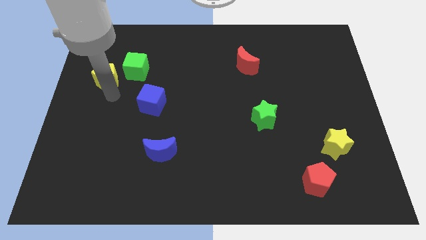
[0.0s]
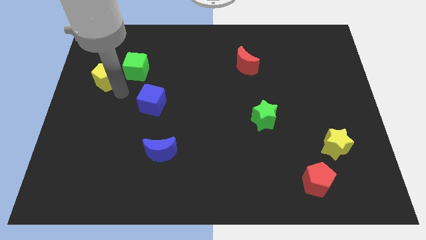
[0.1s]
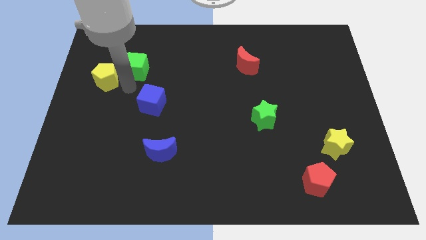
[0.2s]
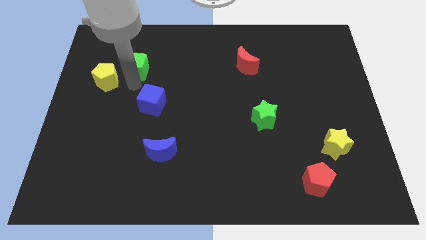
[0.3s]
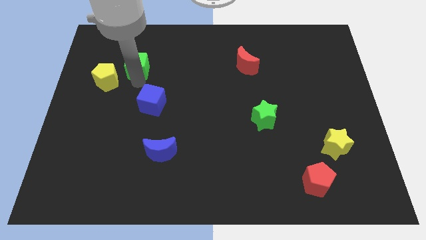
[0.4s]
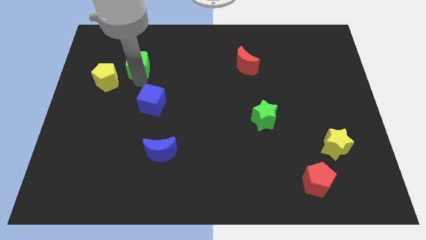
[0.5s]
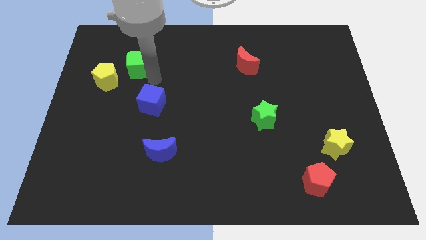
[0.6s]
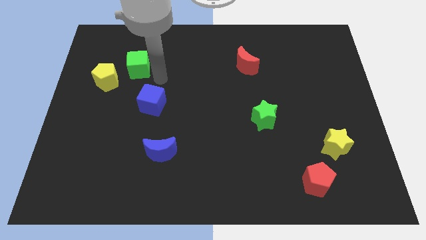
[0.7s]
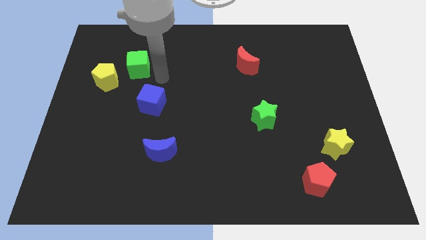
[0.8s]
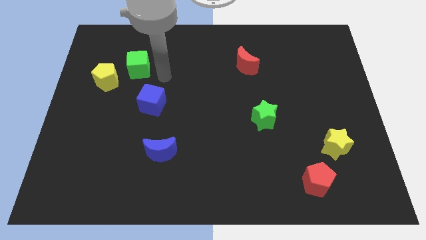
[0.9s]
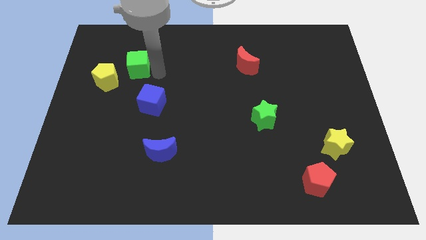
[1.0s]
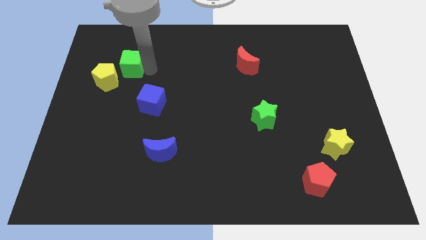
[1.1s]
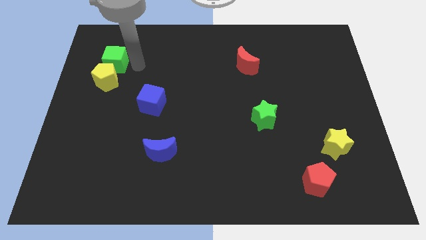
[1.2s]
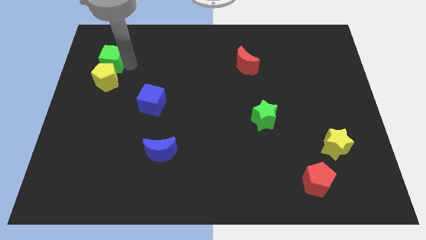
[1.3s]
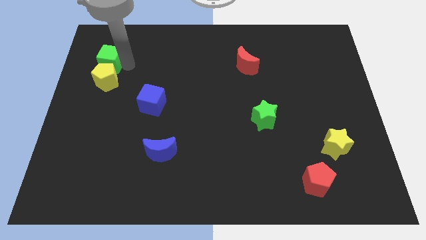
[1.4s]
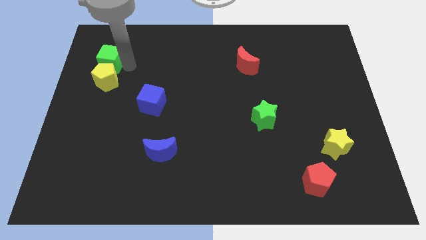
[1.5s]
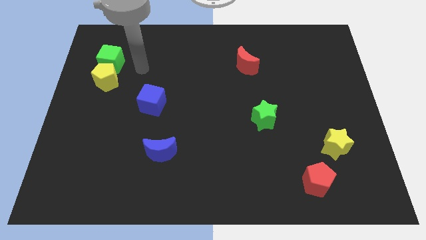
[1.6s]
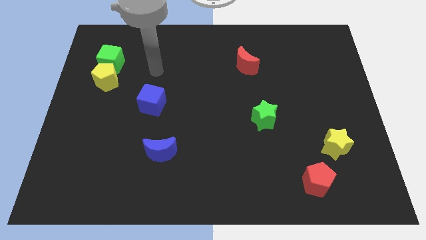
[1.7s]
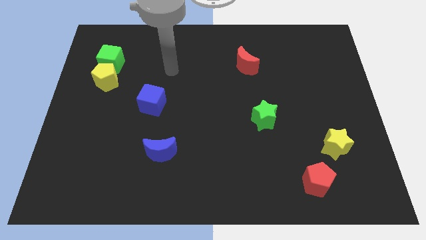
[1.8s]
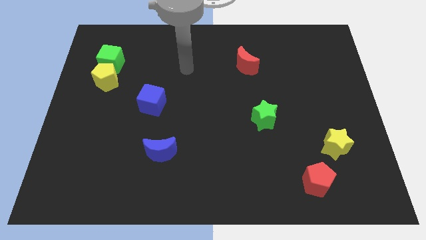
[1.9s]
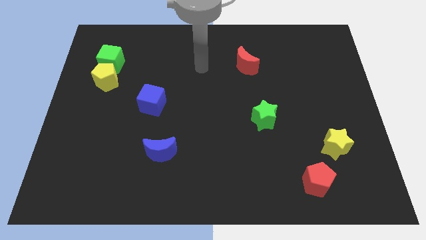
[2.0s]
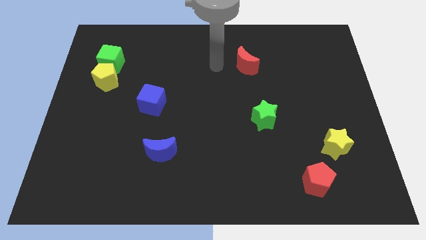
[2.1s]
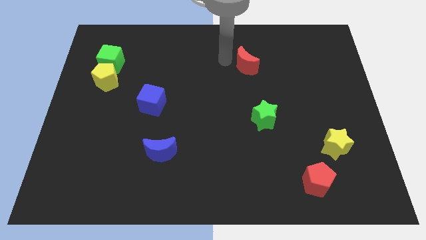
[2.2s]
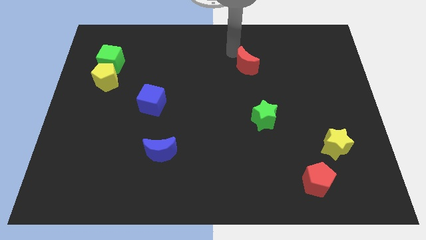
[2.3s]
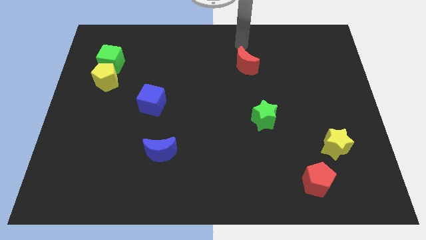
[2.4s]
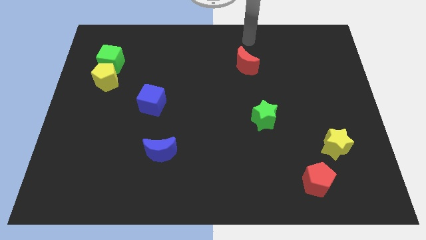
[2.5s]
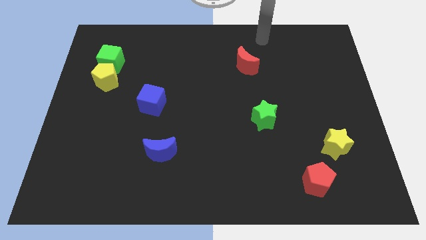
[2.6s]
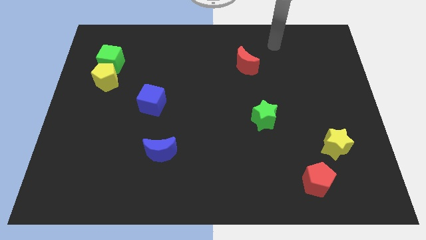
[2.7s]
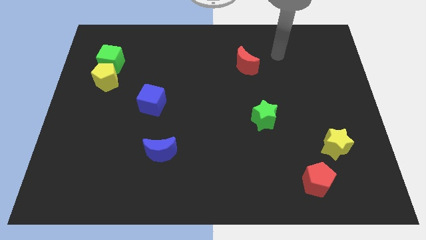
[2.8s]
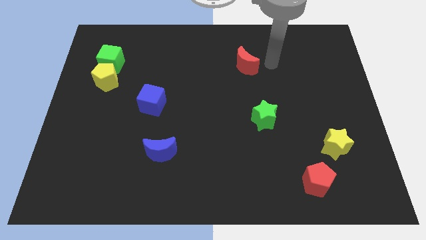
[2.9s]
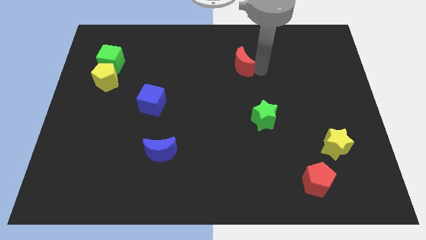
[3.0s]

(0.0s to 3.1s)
push the green cube into the yellow pentagon

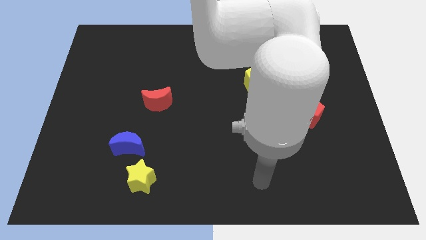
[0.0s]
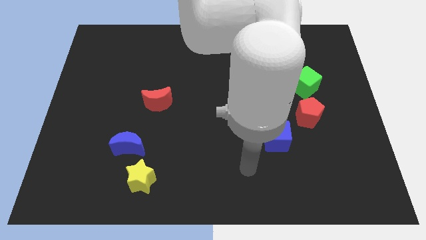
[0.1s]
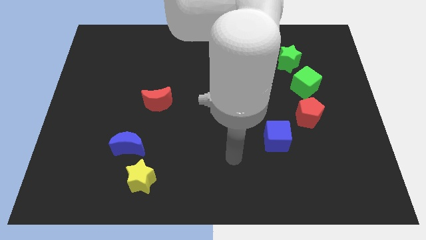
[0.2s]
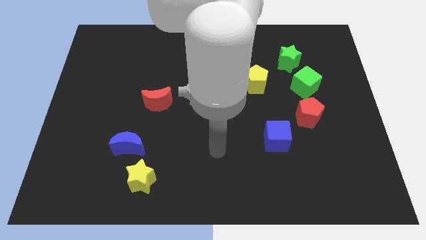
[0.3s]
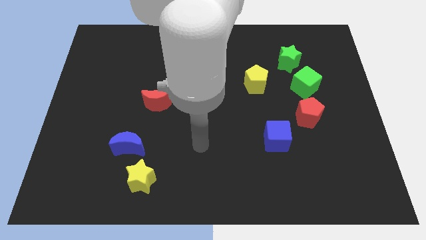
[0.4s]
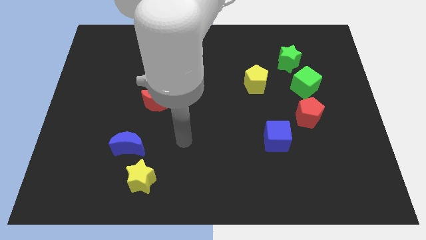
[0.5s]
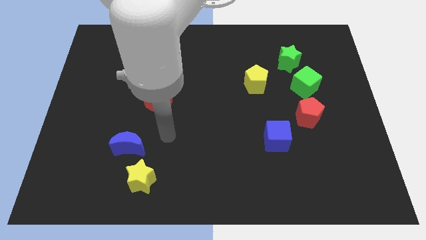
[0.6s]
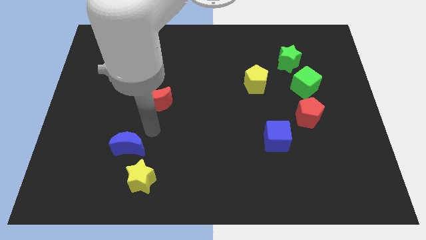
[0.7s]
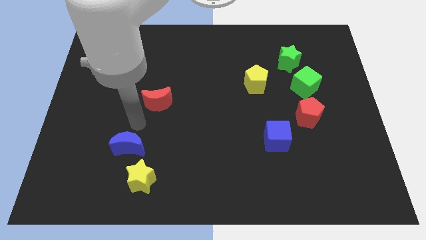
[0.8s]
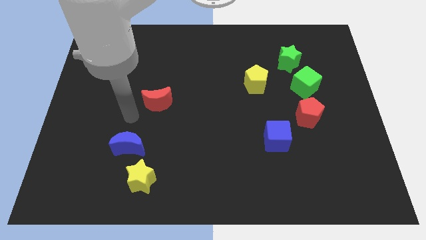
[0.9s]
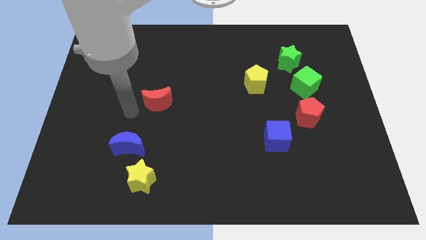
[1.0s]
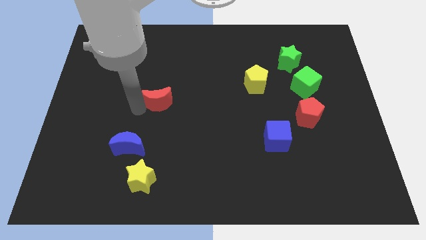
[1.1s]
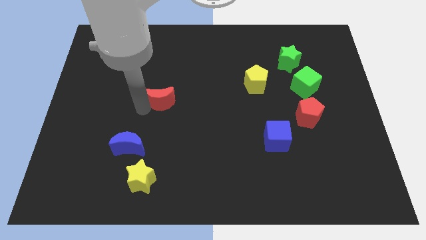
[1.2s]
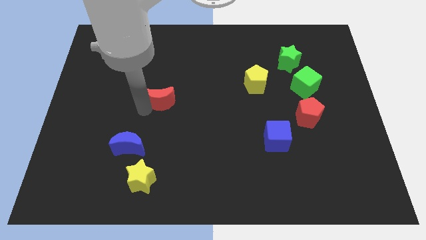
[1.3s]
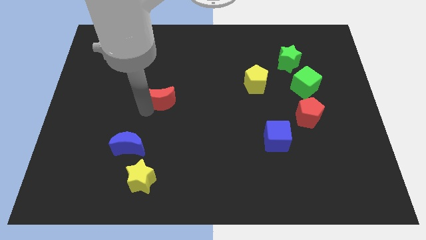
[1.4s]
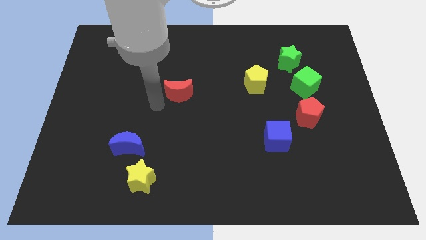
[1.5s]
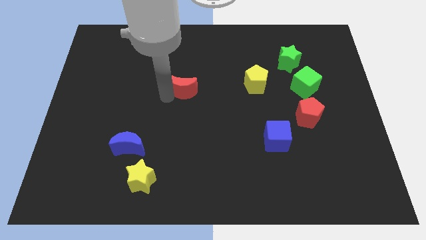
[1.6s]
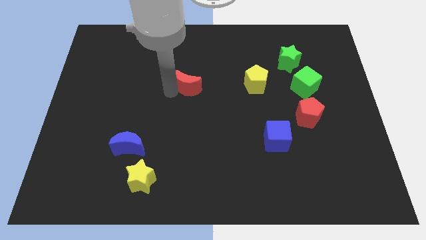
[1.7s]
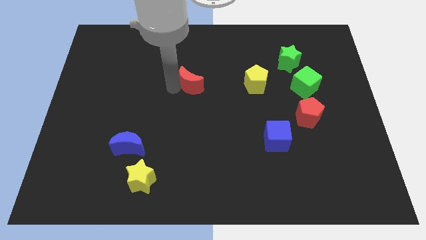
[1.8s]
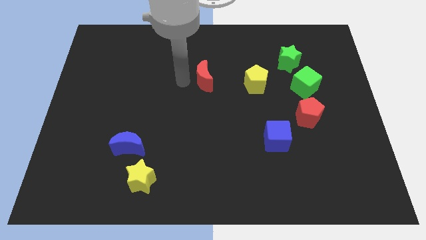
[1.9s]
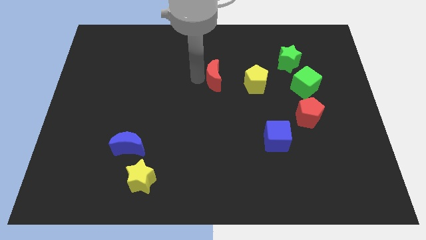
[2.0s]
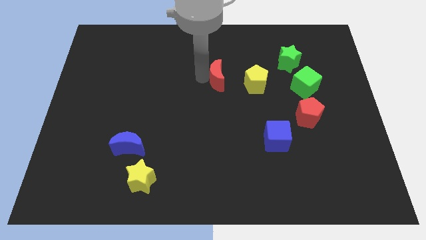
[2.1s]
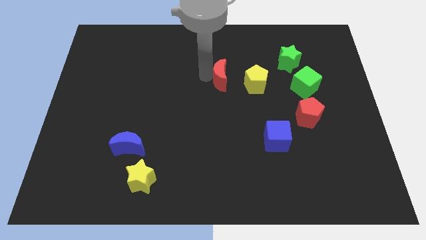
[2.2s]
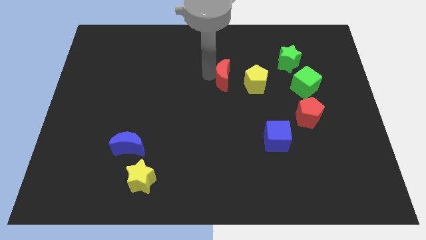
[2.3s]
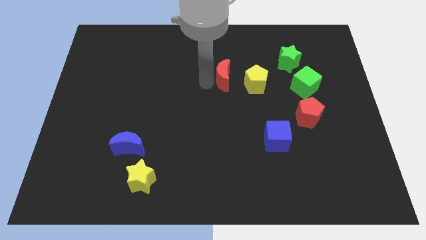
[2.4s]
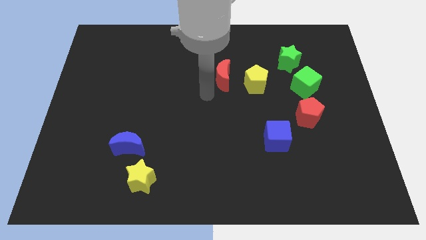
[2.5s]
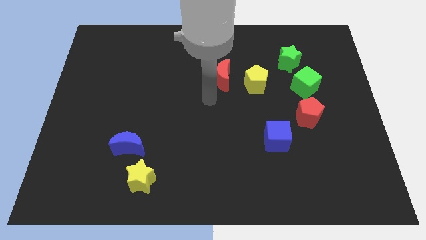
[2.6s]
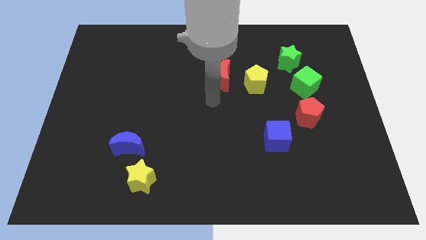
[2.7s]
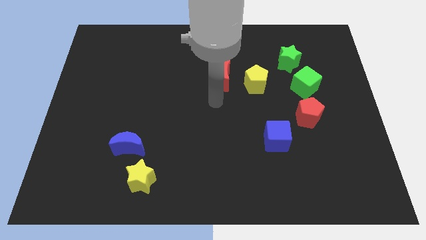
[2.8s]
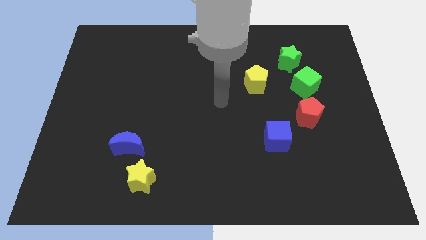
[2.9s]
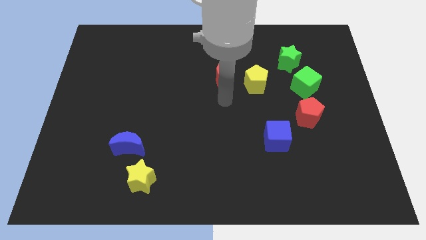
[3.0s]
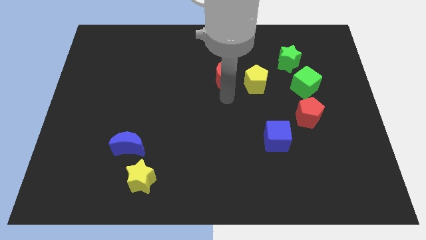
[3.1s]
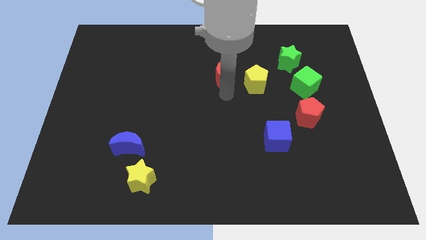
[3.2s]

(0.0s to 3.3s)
move the red crescent to the left of the yellow pentagon

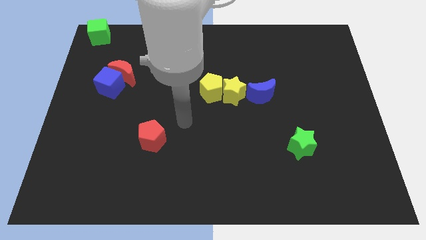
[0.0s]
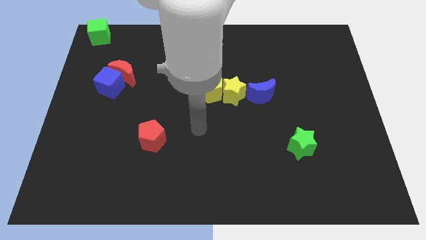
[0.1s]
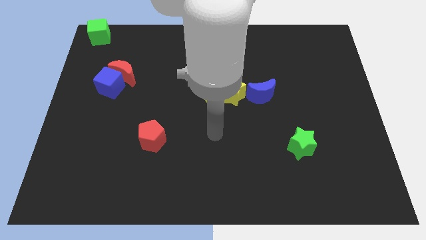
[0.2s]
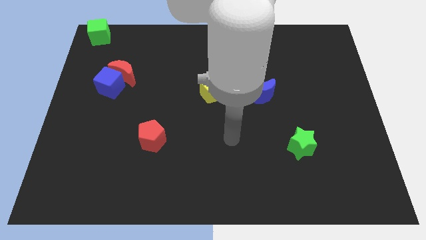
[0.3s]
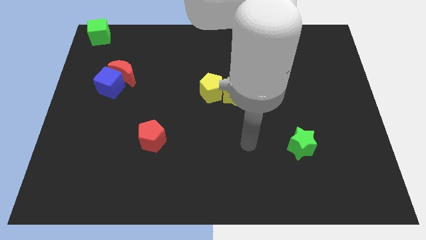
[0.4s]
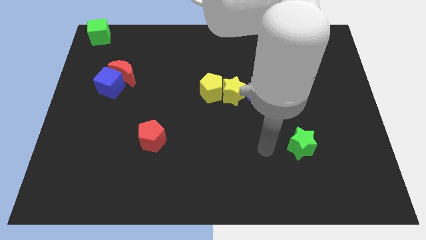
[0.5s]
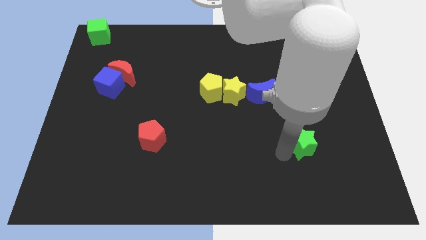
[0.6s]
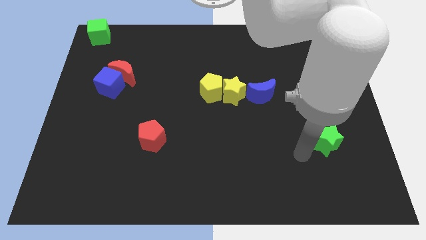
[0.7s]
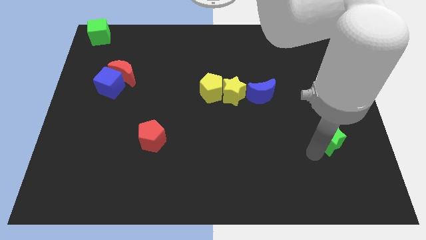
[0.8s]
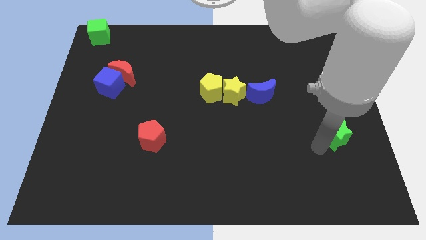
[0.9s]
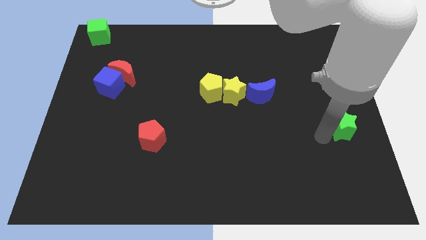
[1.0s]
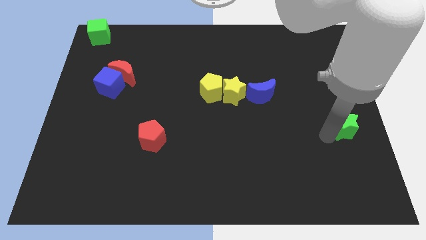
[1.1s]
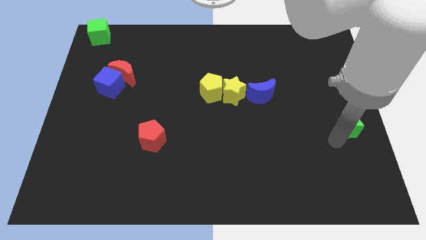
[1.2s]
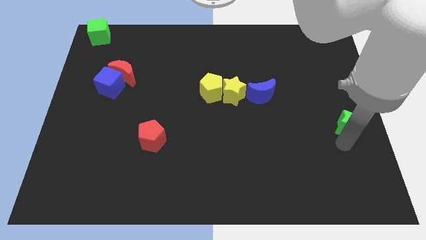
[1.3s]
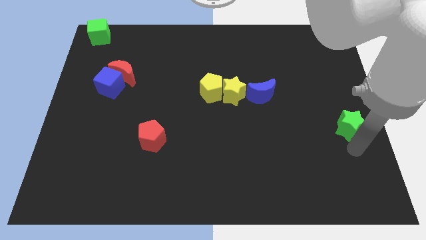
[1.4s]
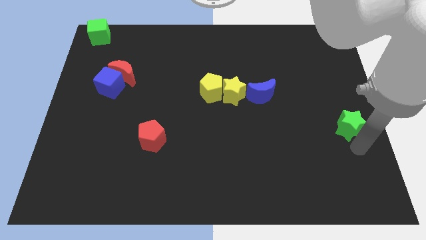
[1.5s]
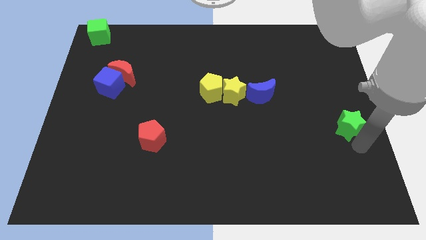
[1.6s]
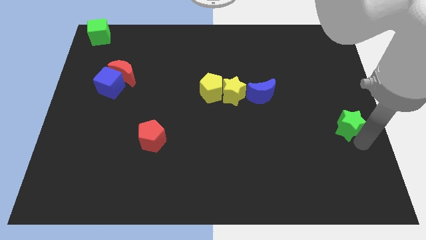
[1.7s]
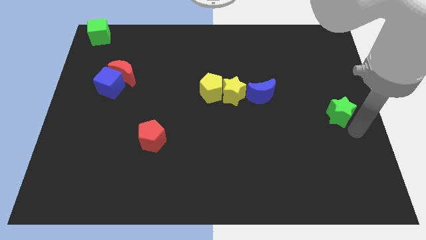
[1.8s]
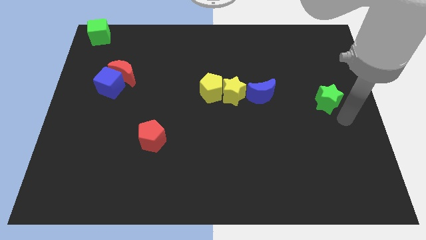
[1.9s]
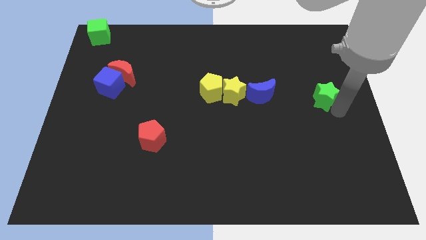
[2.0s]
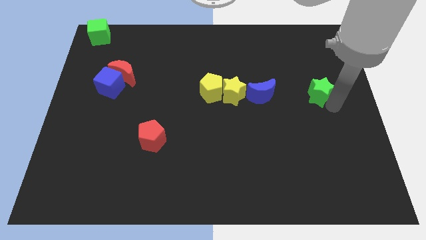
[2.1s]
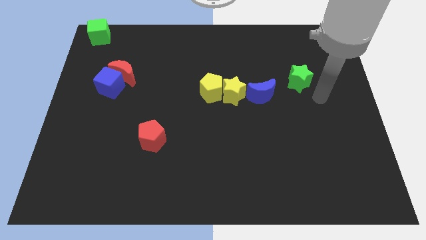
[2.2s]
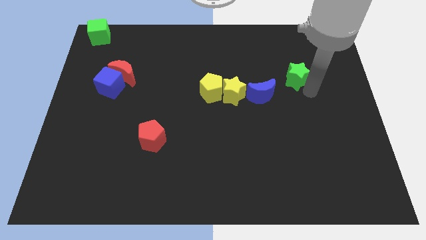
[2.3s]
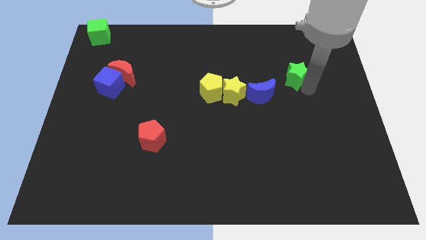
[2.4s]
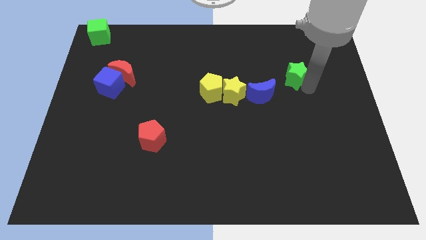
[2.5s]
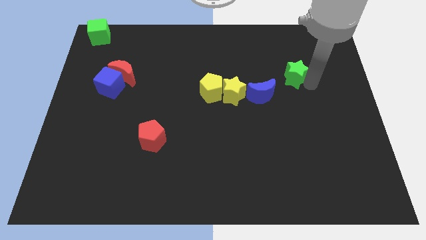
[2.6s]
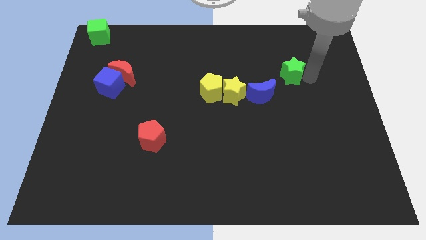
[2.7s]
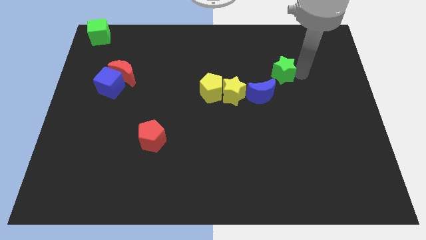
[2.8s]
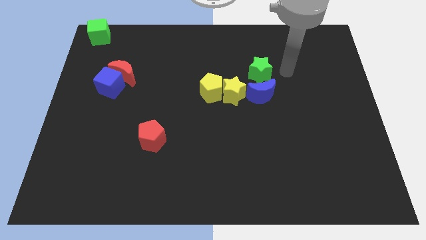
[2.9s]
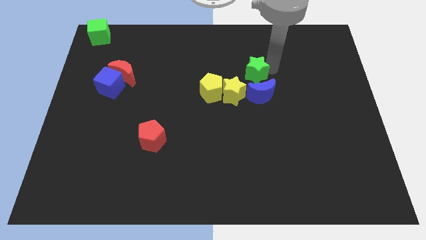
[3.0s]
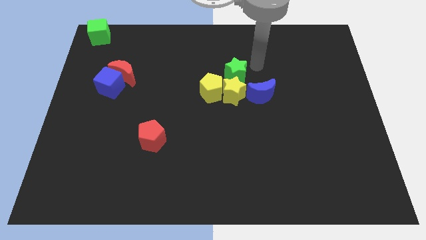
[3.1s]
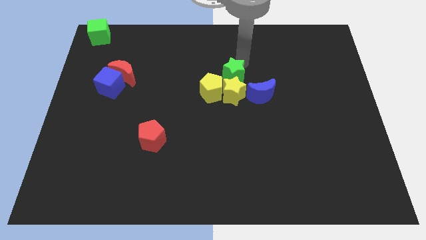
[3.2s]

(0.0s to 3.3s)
place the green star above the yellow star
